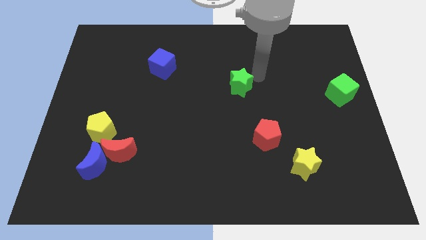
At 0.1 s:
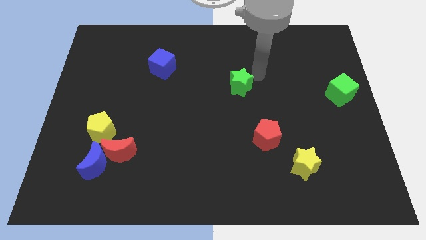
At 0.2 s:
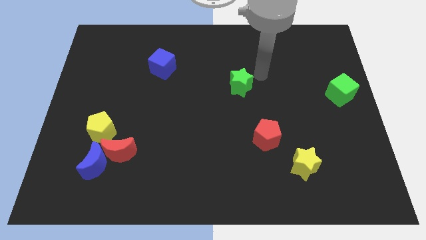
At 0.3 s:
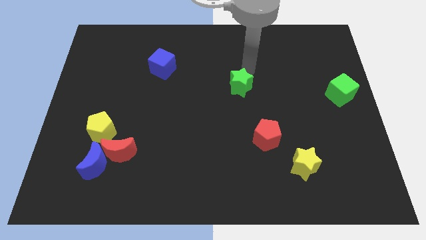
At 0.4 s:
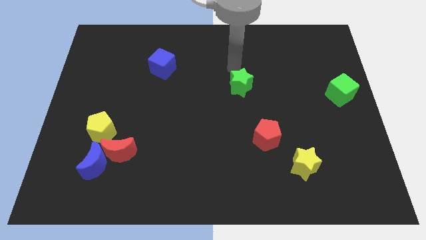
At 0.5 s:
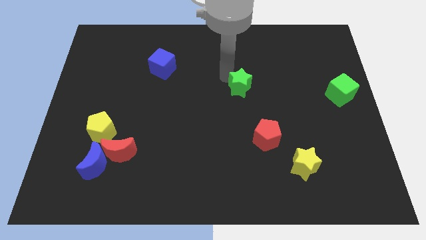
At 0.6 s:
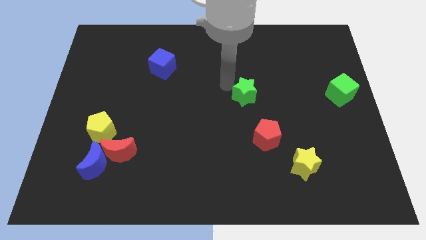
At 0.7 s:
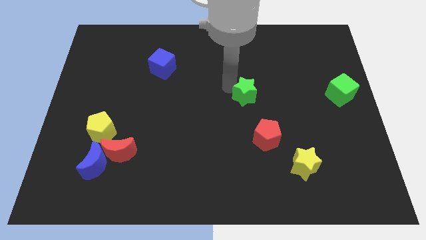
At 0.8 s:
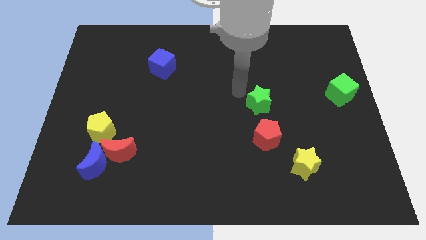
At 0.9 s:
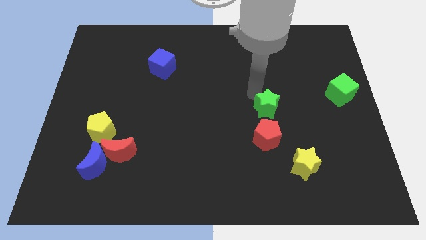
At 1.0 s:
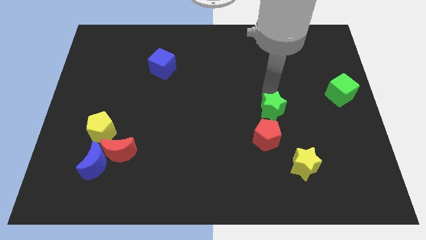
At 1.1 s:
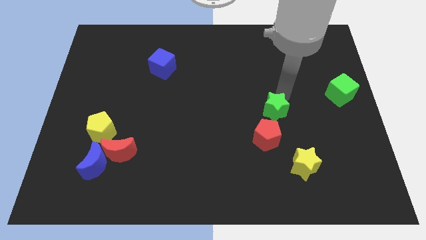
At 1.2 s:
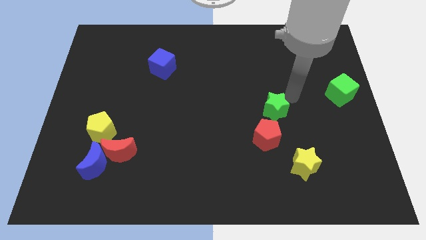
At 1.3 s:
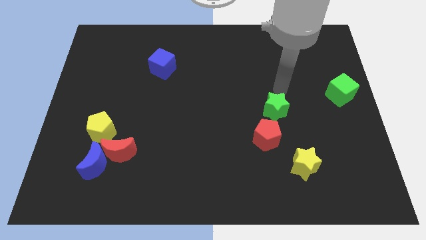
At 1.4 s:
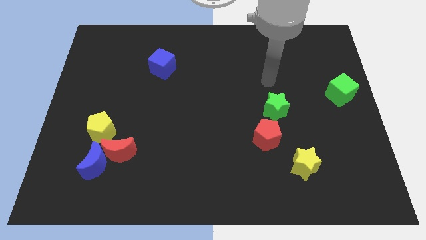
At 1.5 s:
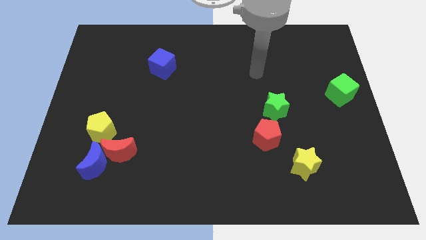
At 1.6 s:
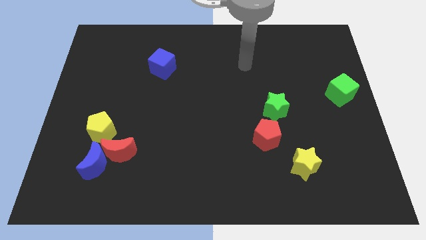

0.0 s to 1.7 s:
move green star towards red pentagon

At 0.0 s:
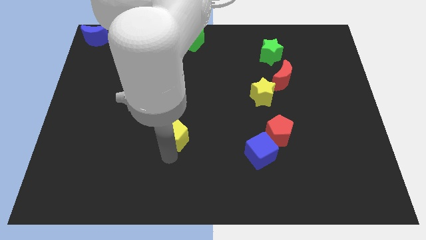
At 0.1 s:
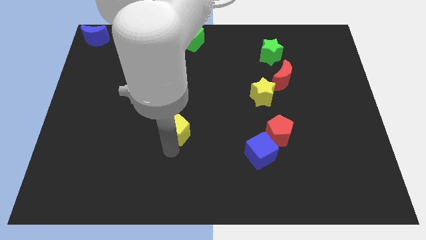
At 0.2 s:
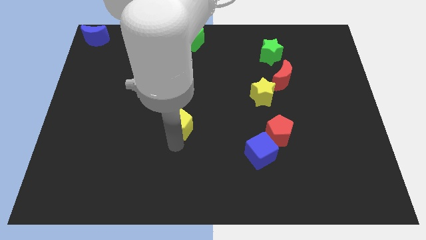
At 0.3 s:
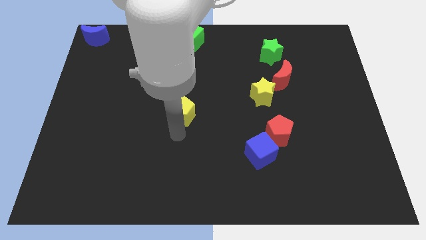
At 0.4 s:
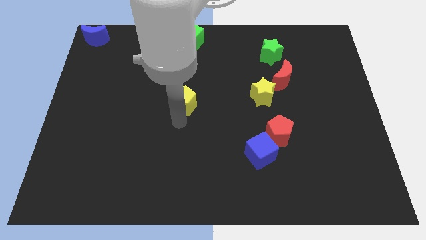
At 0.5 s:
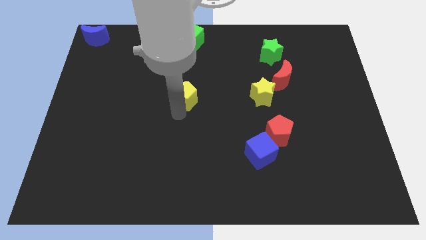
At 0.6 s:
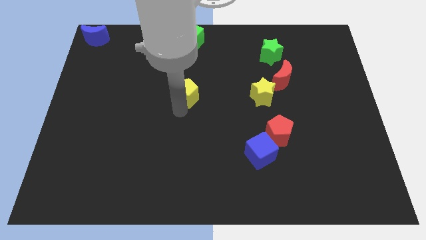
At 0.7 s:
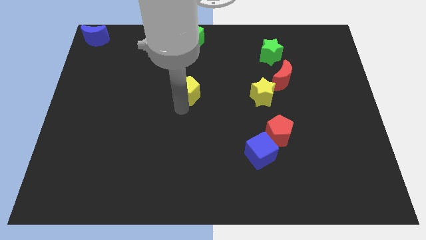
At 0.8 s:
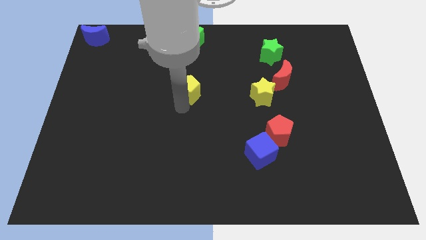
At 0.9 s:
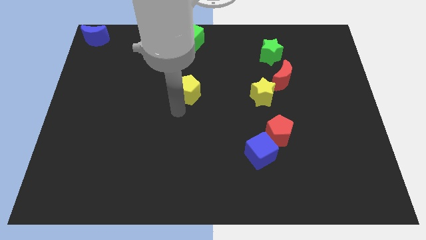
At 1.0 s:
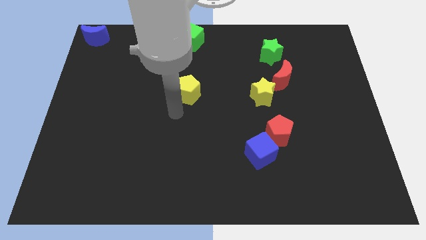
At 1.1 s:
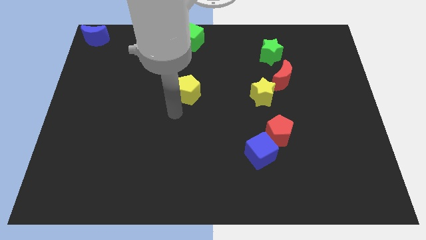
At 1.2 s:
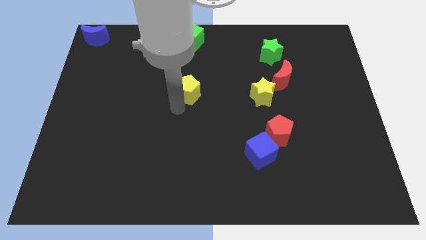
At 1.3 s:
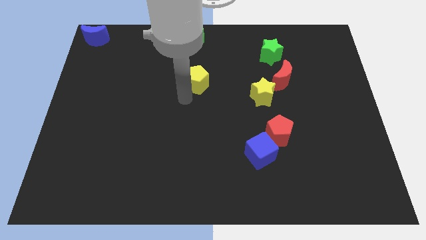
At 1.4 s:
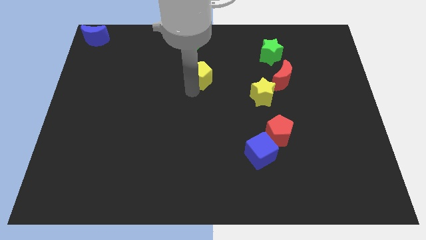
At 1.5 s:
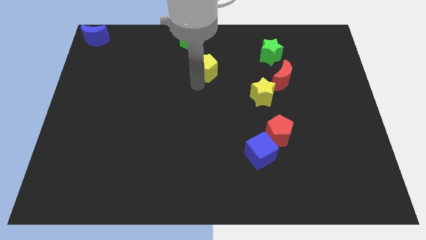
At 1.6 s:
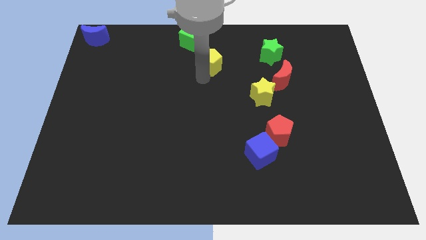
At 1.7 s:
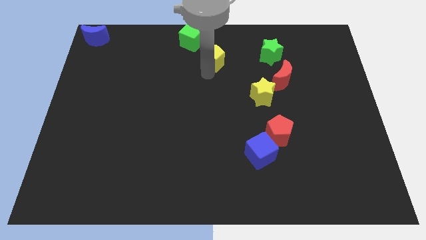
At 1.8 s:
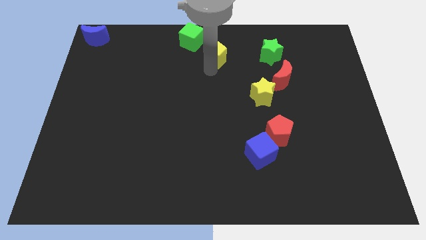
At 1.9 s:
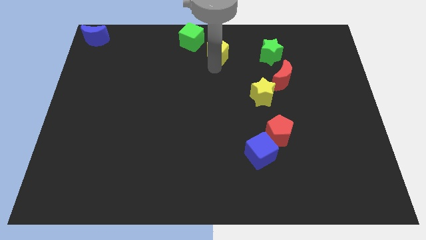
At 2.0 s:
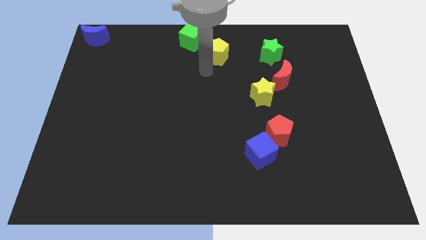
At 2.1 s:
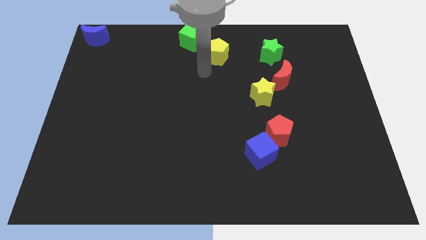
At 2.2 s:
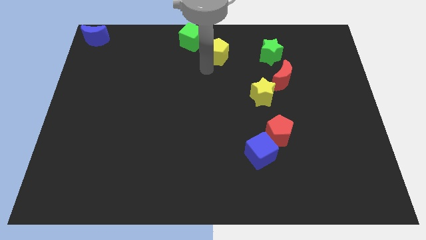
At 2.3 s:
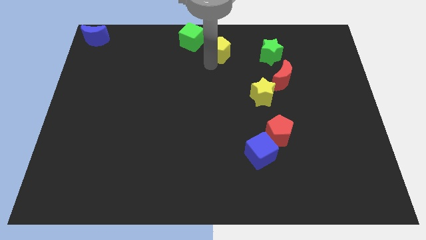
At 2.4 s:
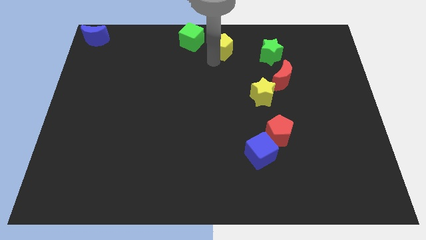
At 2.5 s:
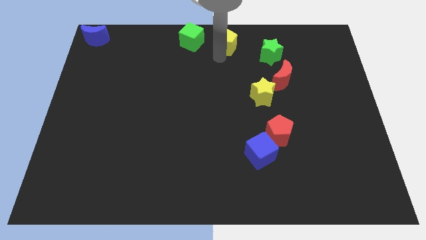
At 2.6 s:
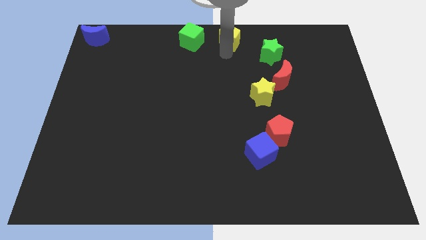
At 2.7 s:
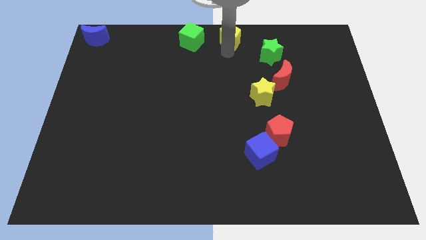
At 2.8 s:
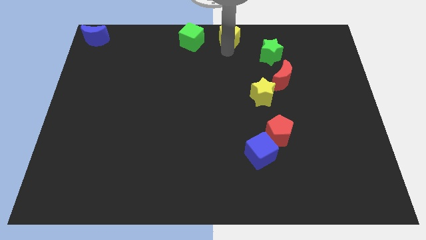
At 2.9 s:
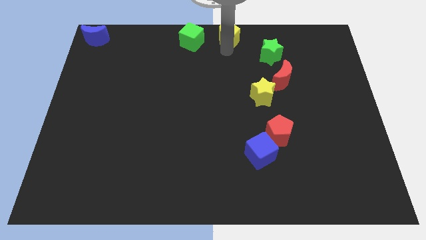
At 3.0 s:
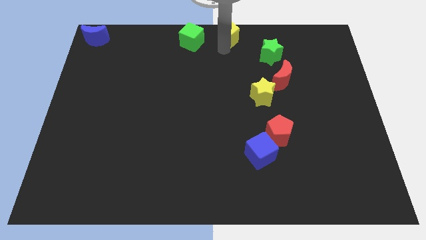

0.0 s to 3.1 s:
move the yellow pentagon to the right of the green cube

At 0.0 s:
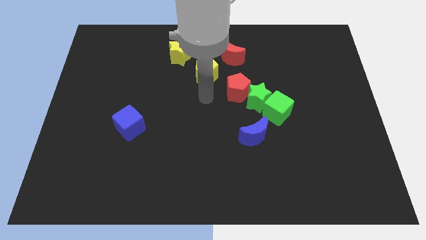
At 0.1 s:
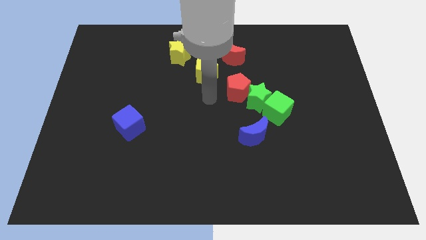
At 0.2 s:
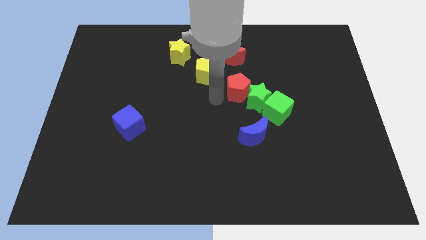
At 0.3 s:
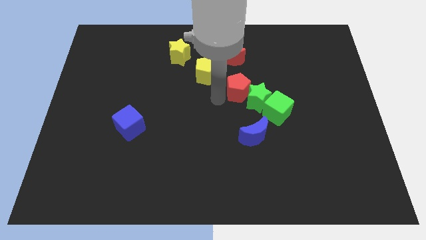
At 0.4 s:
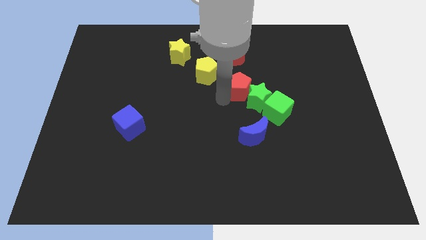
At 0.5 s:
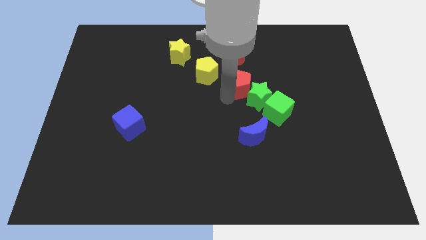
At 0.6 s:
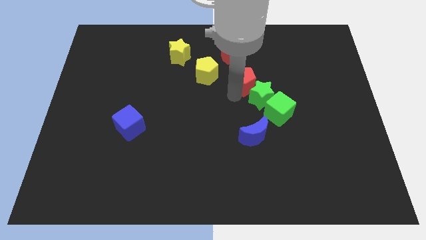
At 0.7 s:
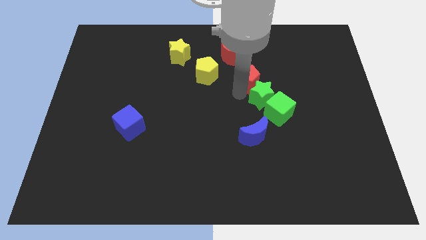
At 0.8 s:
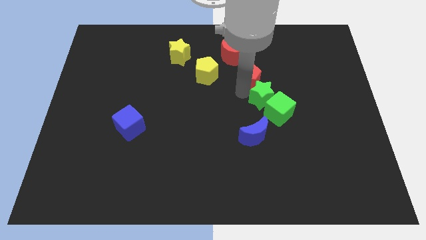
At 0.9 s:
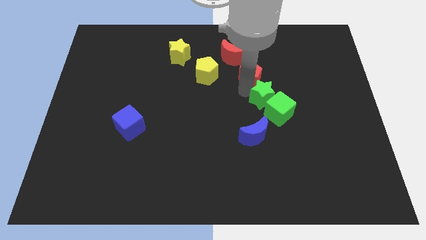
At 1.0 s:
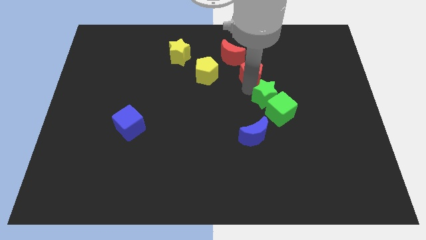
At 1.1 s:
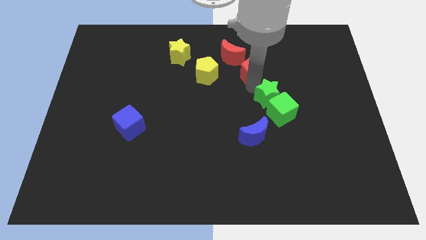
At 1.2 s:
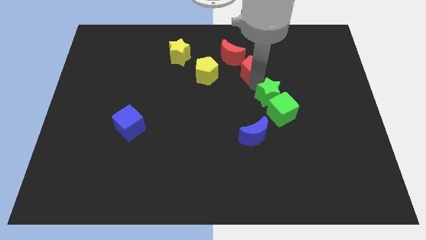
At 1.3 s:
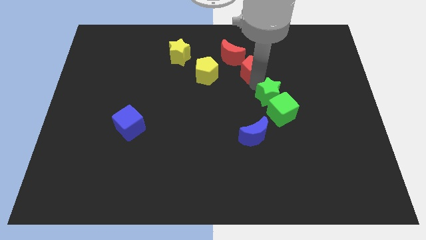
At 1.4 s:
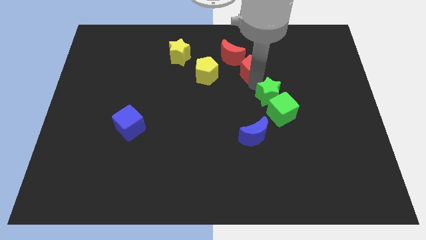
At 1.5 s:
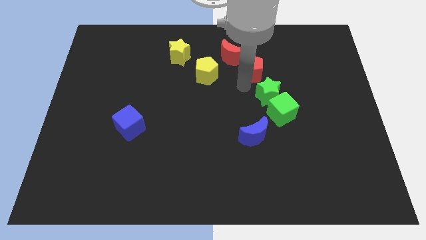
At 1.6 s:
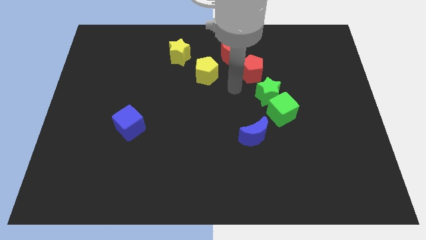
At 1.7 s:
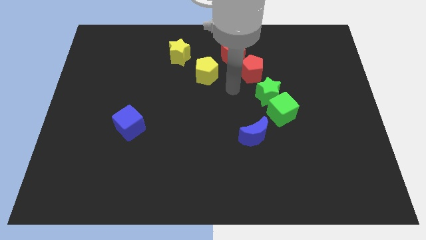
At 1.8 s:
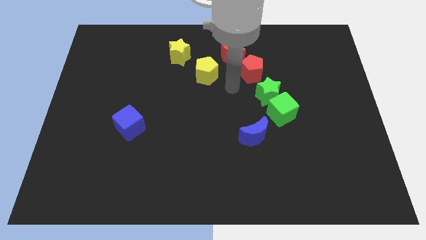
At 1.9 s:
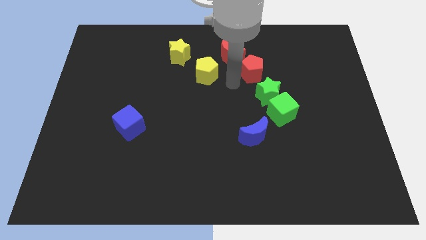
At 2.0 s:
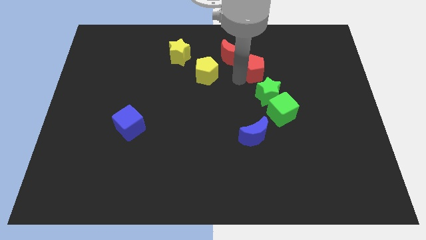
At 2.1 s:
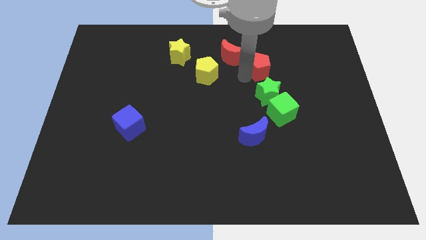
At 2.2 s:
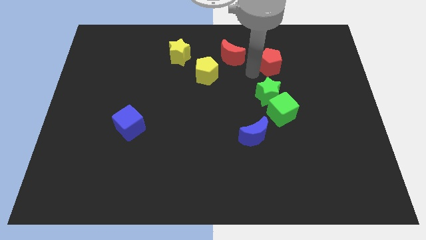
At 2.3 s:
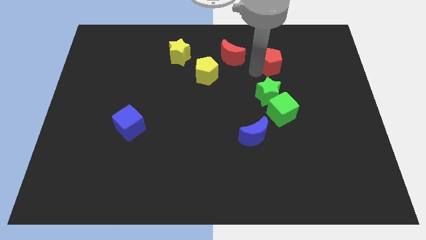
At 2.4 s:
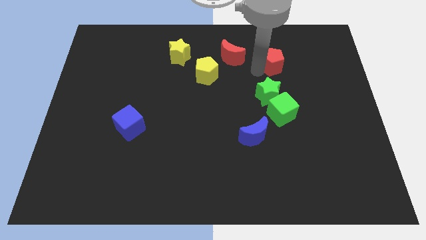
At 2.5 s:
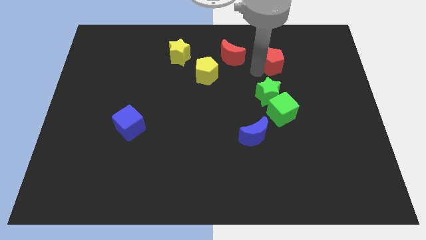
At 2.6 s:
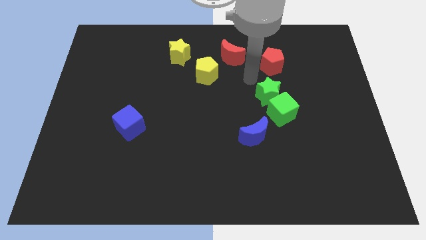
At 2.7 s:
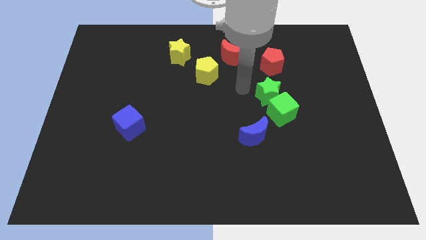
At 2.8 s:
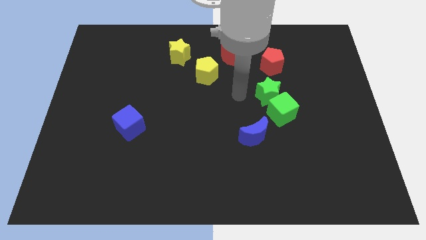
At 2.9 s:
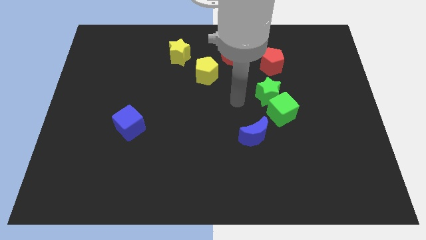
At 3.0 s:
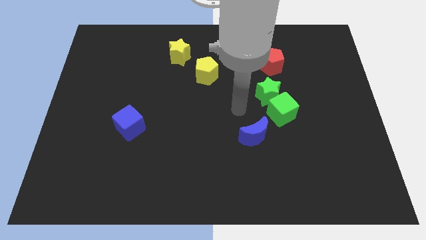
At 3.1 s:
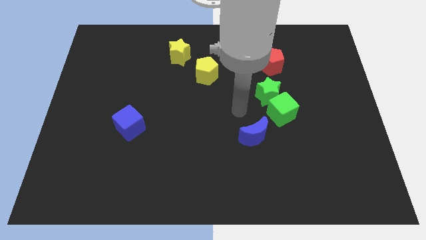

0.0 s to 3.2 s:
separate red pentagon from the green star

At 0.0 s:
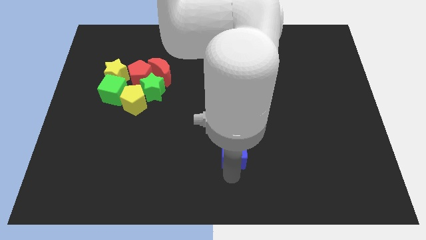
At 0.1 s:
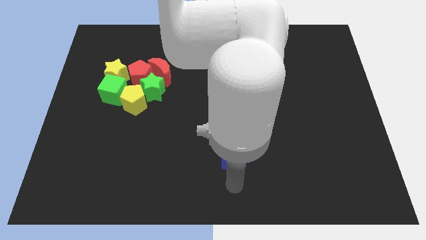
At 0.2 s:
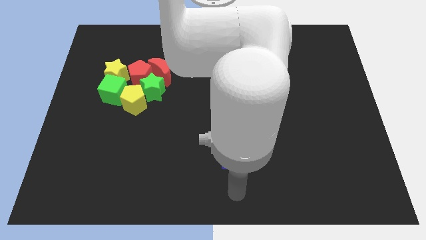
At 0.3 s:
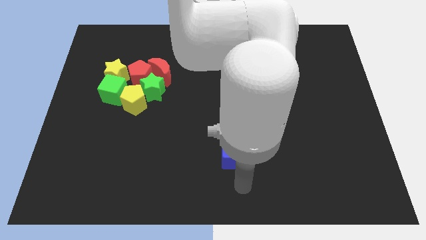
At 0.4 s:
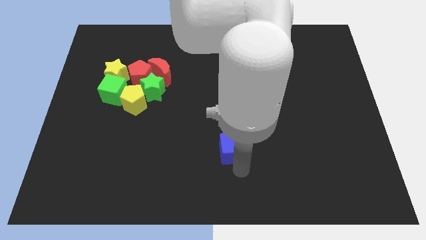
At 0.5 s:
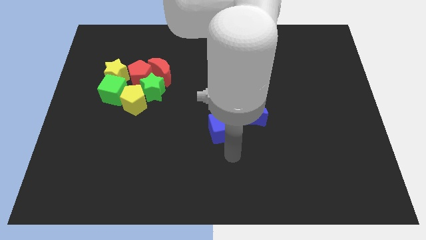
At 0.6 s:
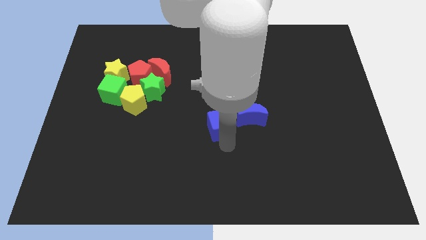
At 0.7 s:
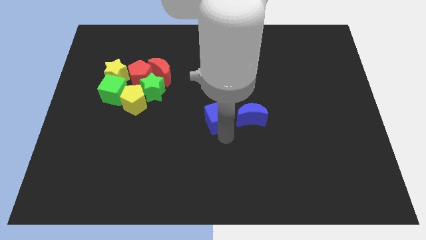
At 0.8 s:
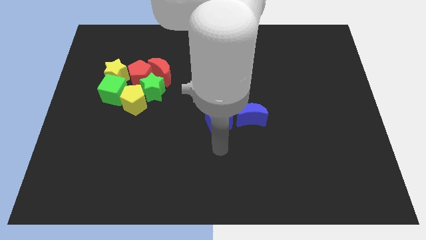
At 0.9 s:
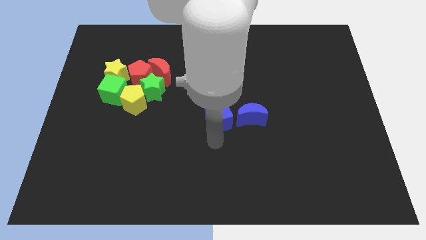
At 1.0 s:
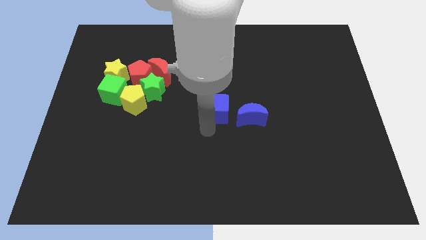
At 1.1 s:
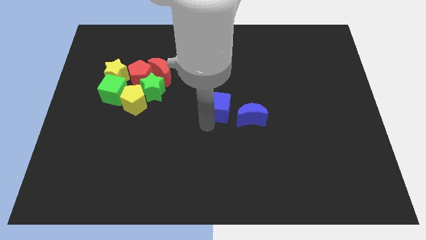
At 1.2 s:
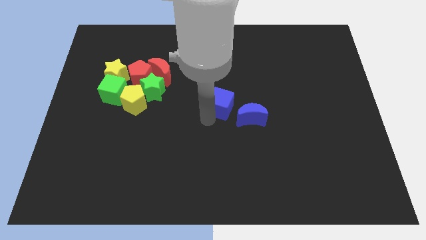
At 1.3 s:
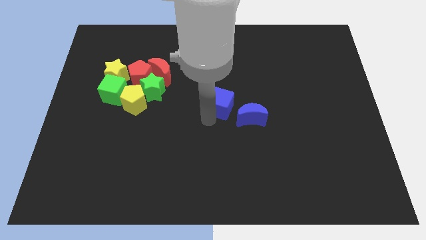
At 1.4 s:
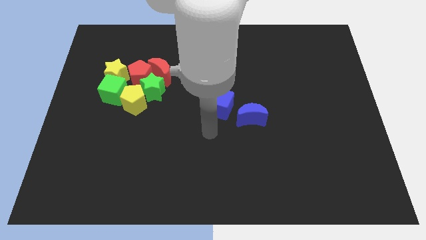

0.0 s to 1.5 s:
push the blue cube towards the left side of the blue crescent
